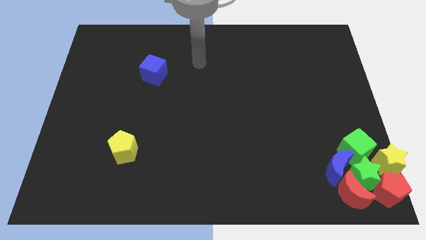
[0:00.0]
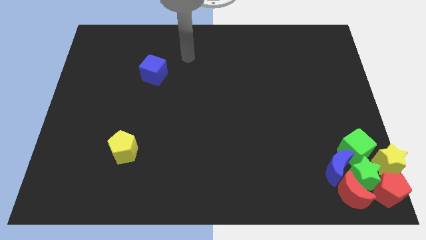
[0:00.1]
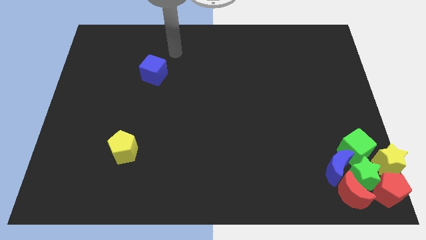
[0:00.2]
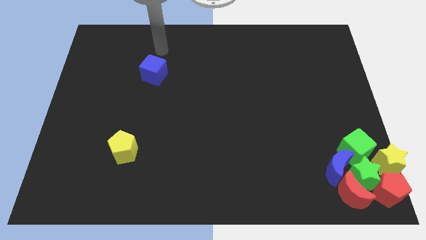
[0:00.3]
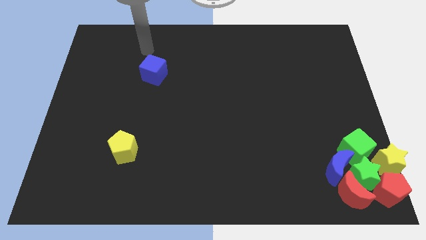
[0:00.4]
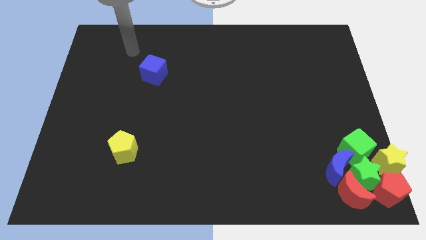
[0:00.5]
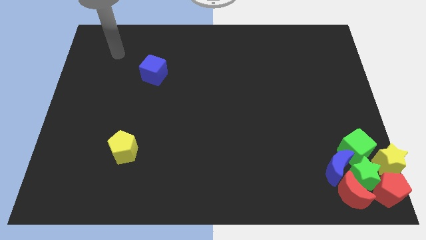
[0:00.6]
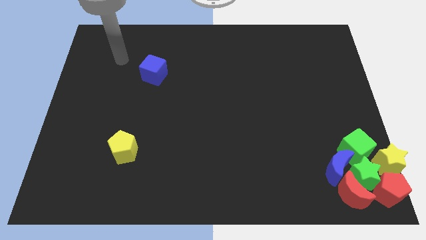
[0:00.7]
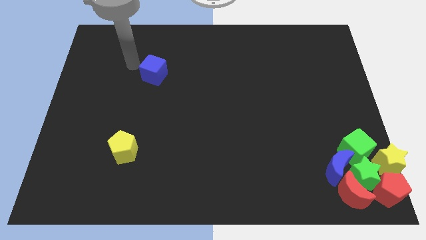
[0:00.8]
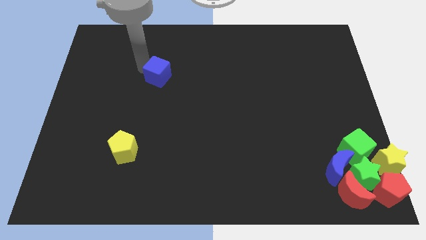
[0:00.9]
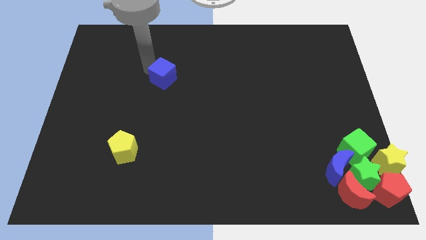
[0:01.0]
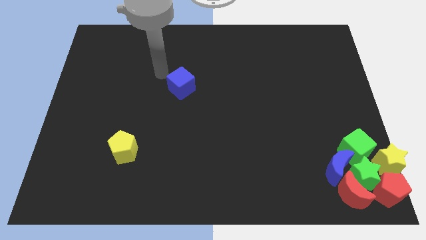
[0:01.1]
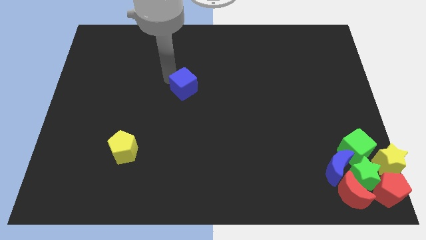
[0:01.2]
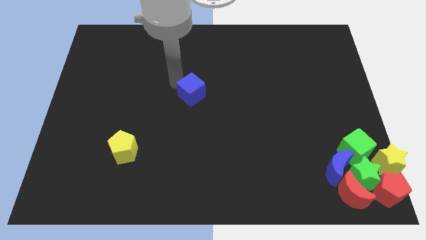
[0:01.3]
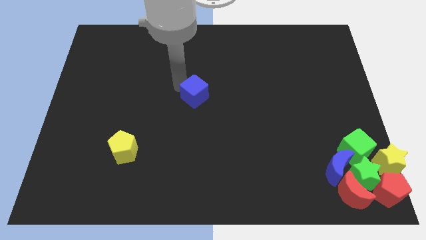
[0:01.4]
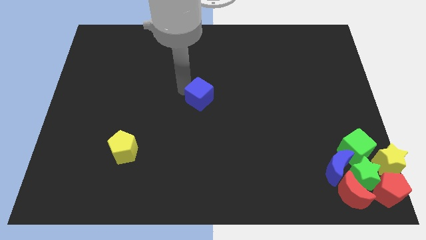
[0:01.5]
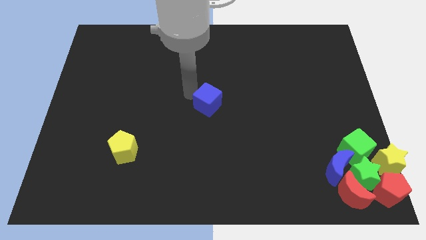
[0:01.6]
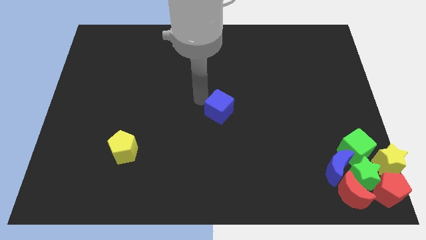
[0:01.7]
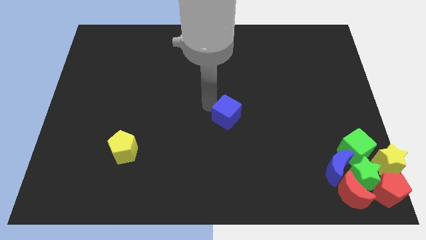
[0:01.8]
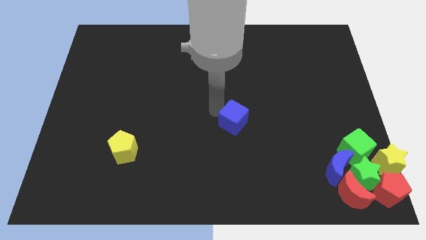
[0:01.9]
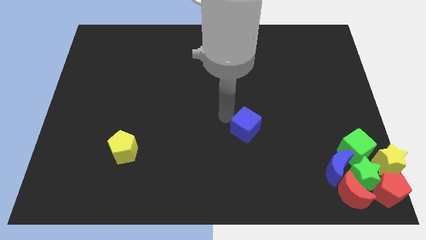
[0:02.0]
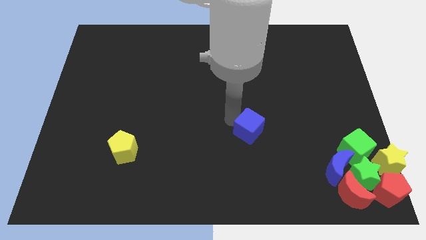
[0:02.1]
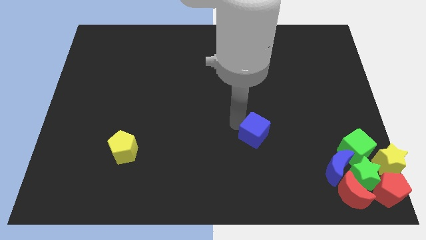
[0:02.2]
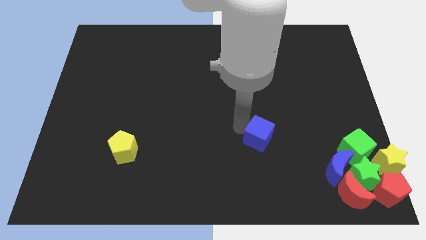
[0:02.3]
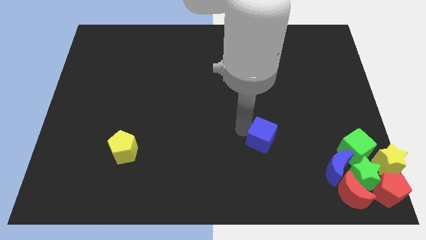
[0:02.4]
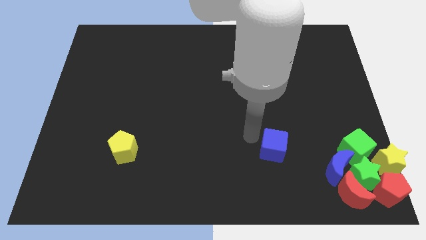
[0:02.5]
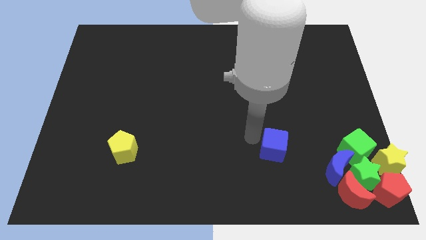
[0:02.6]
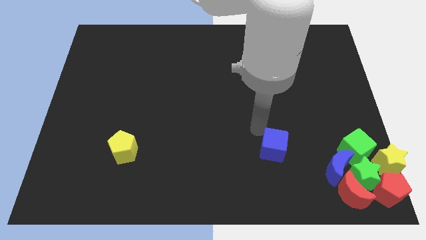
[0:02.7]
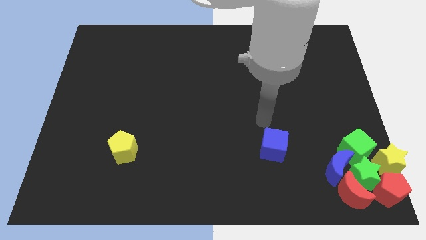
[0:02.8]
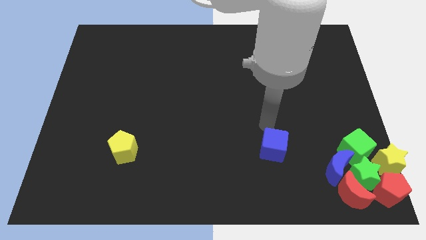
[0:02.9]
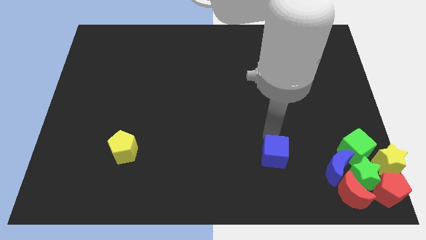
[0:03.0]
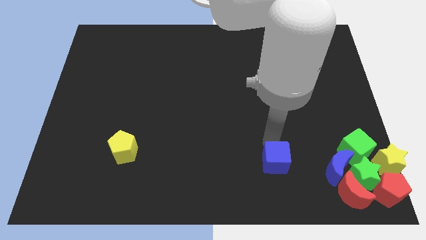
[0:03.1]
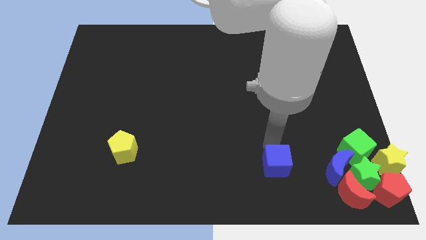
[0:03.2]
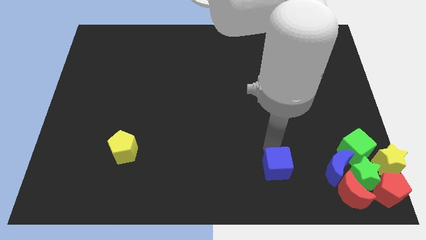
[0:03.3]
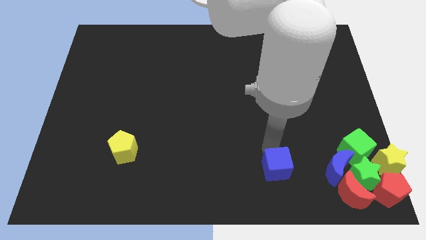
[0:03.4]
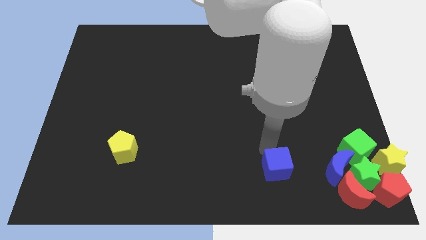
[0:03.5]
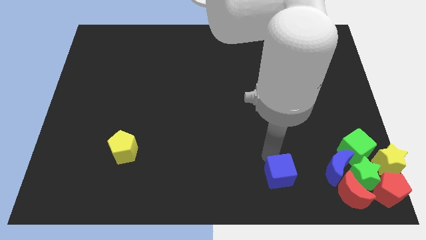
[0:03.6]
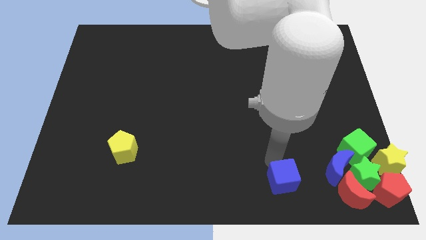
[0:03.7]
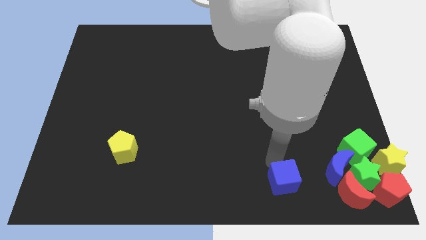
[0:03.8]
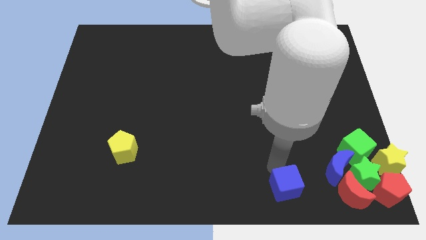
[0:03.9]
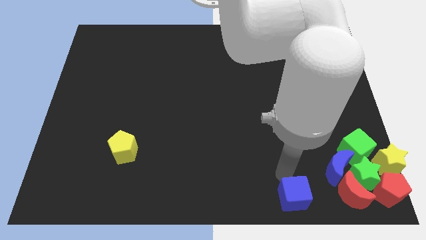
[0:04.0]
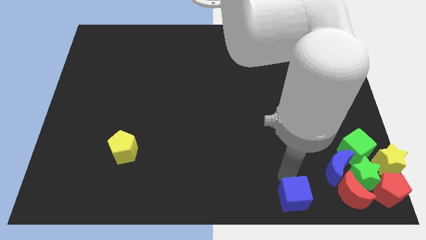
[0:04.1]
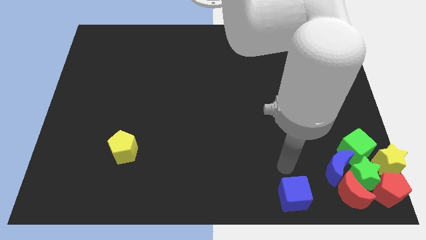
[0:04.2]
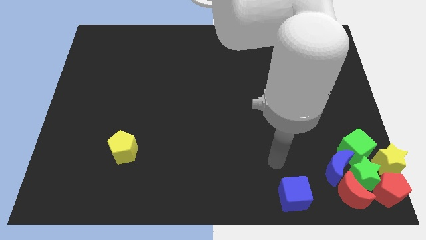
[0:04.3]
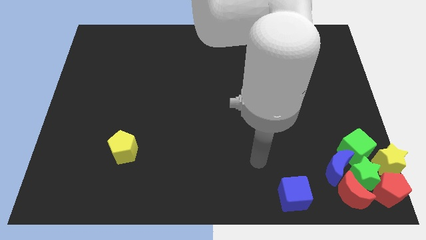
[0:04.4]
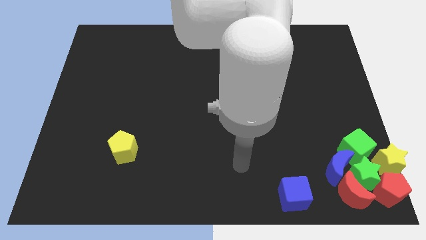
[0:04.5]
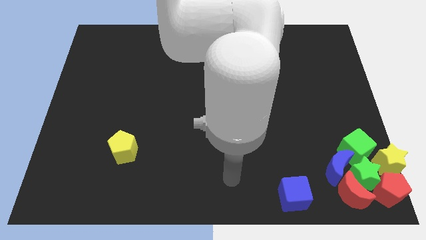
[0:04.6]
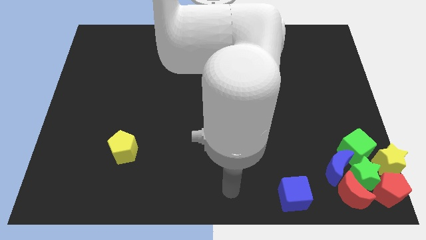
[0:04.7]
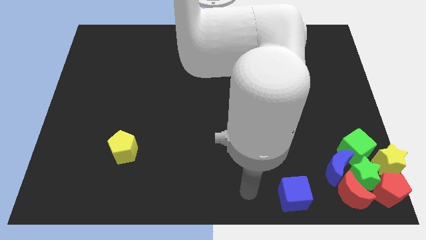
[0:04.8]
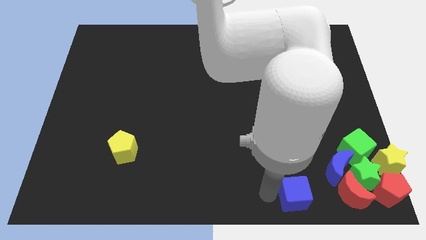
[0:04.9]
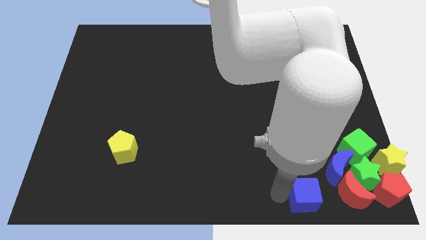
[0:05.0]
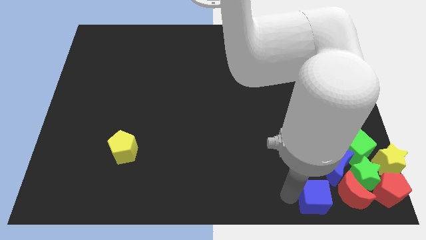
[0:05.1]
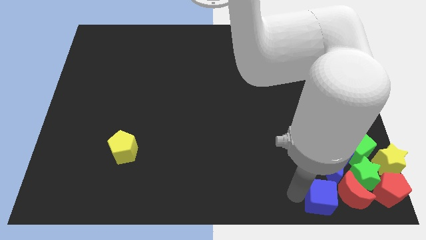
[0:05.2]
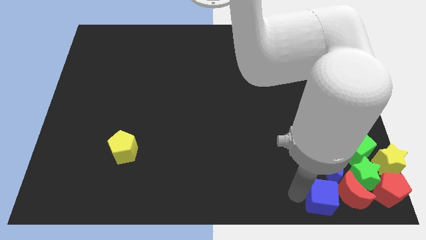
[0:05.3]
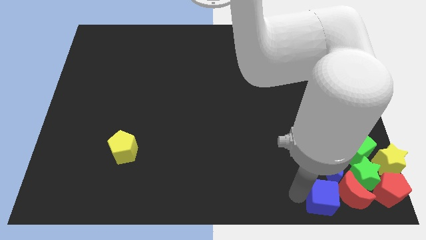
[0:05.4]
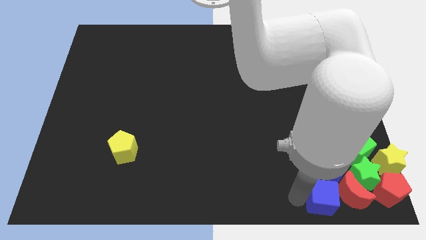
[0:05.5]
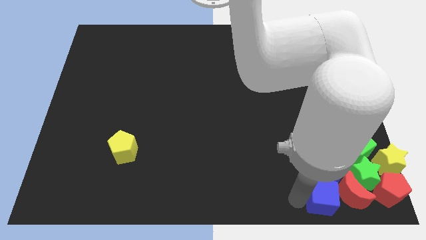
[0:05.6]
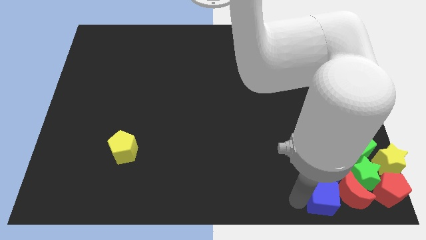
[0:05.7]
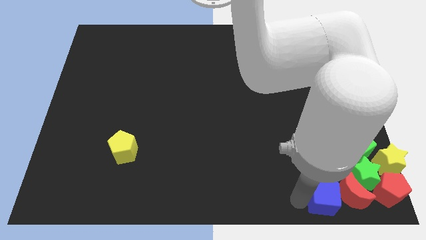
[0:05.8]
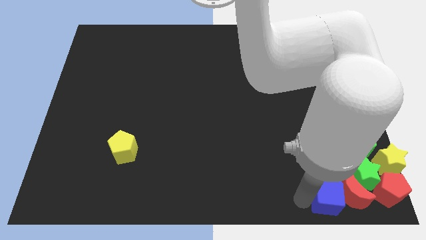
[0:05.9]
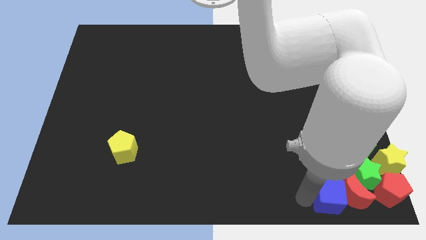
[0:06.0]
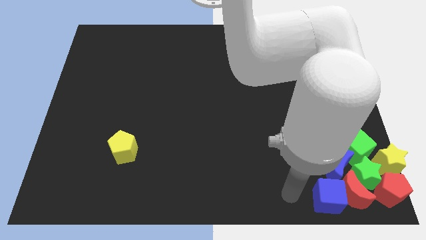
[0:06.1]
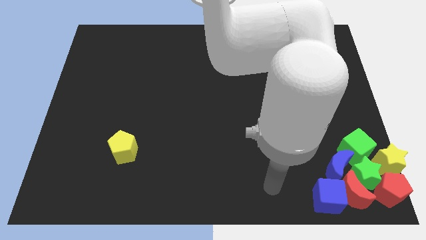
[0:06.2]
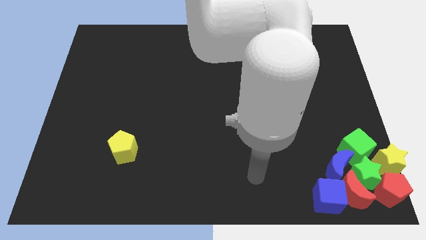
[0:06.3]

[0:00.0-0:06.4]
push the blue cube towards the red moon on the bottom right

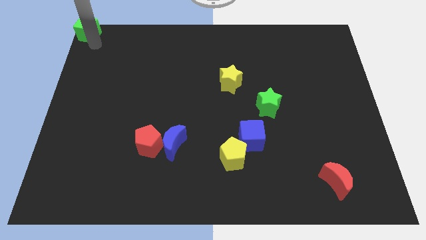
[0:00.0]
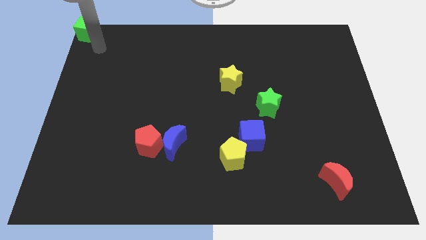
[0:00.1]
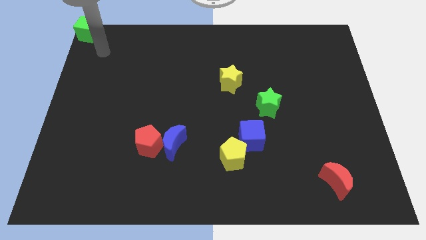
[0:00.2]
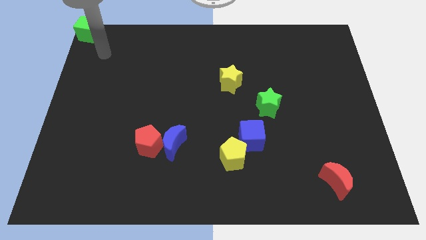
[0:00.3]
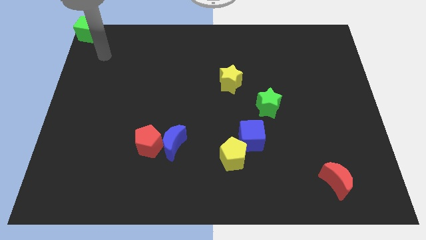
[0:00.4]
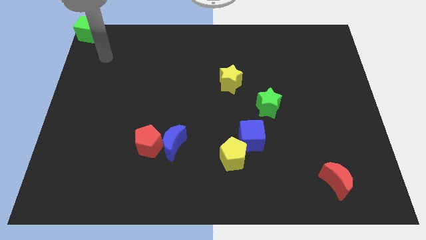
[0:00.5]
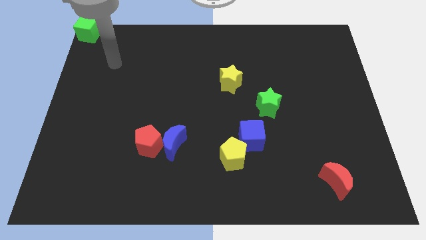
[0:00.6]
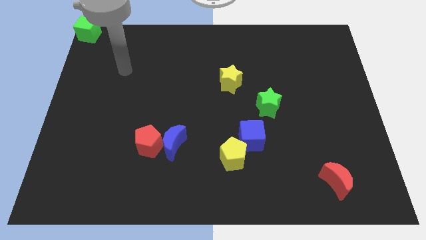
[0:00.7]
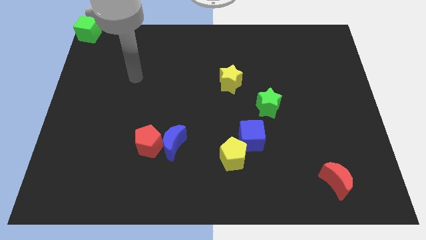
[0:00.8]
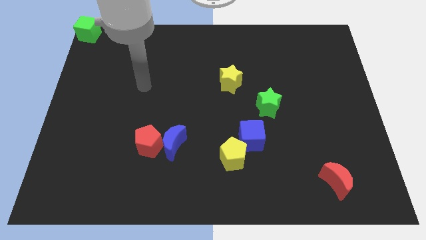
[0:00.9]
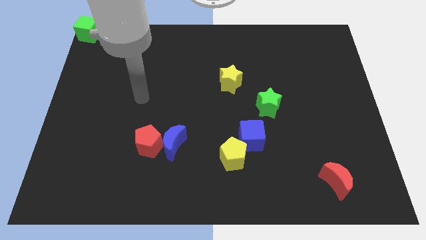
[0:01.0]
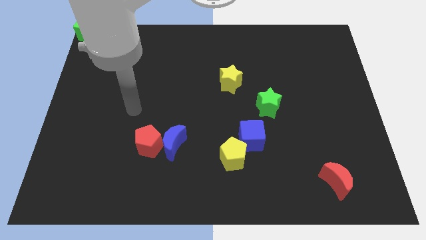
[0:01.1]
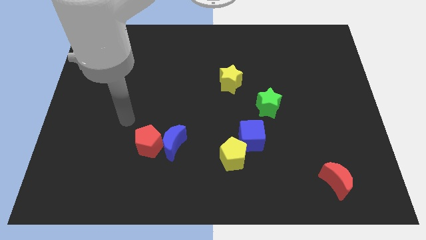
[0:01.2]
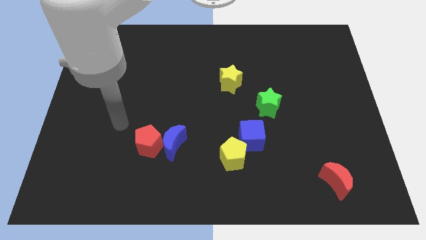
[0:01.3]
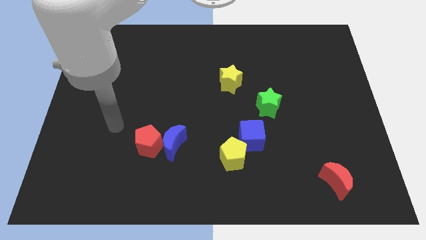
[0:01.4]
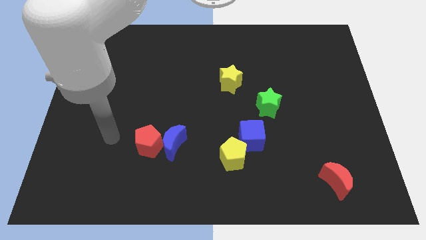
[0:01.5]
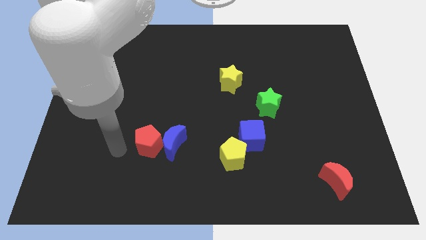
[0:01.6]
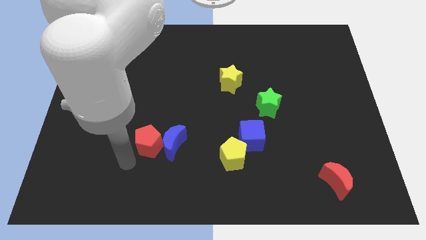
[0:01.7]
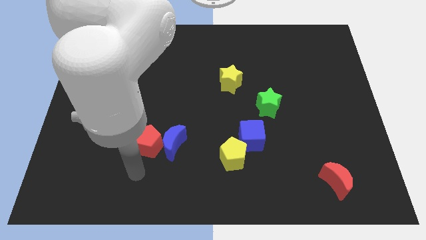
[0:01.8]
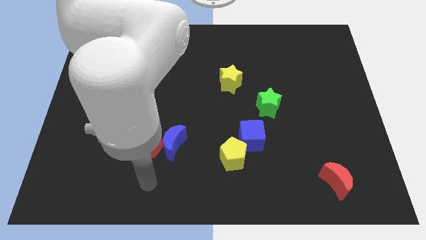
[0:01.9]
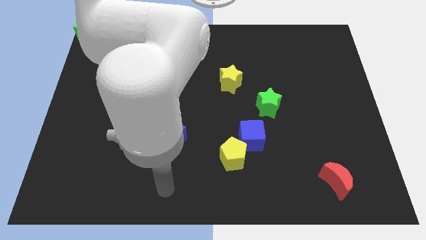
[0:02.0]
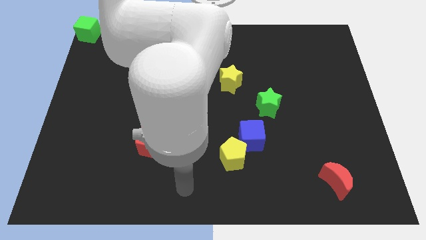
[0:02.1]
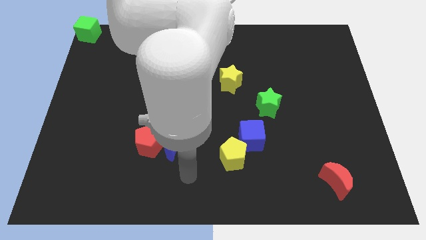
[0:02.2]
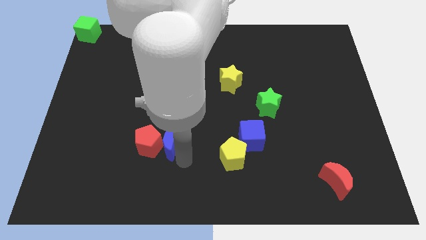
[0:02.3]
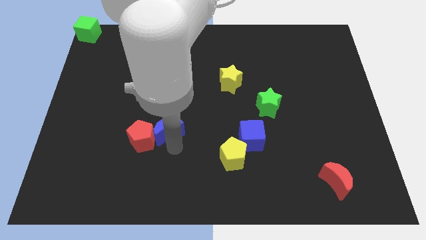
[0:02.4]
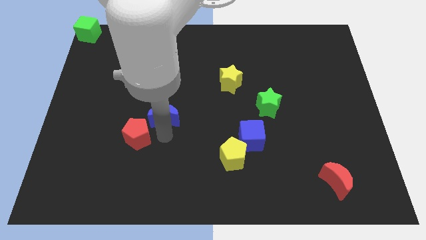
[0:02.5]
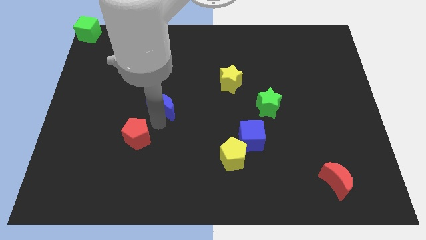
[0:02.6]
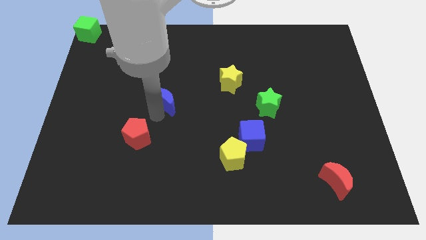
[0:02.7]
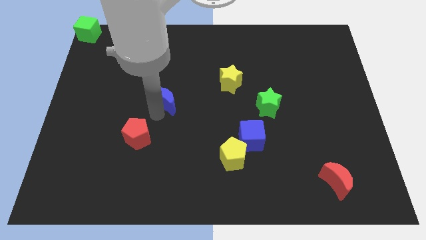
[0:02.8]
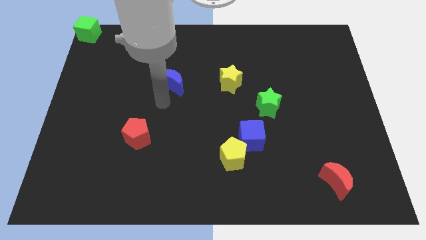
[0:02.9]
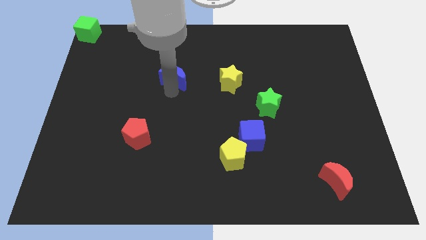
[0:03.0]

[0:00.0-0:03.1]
place the blue moon parallel to the yellow star
